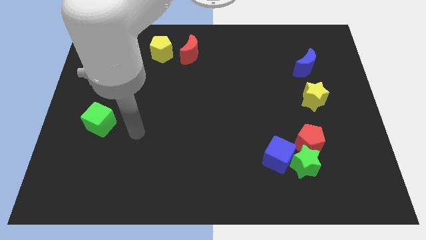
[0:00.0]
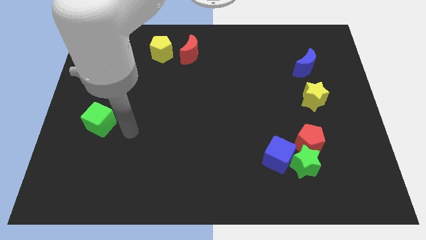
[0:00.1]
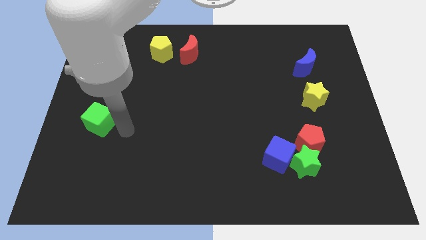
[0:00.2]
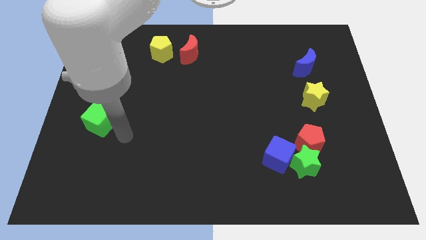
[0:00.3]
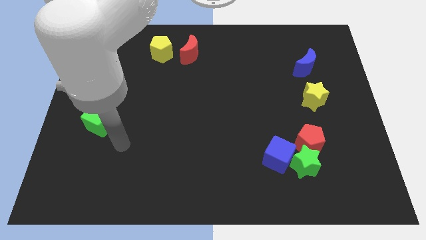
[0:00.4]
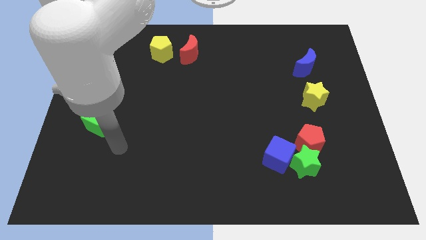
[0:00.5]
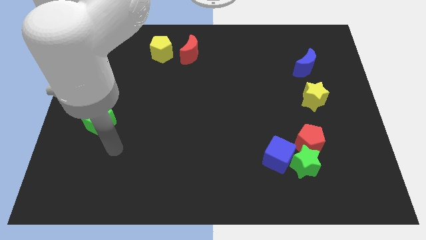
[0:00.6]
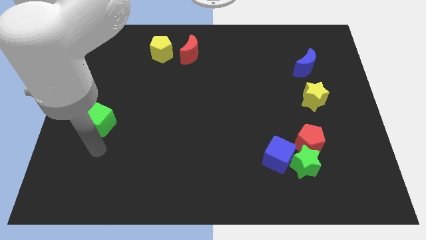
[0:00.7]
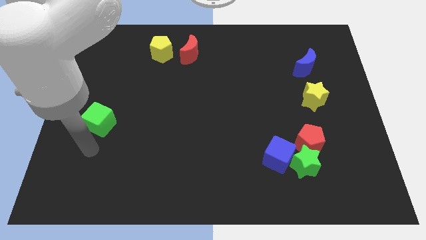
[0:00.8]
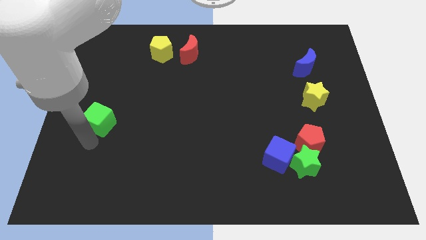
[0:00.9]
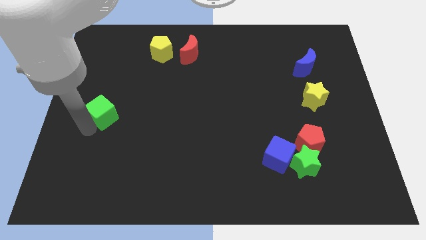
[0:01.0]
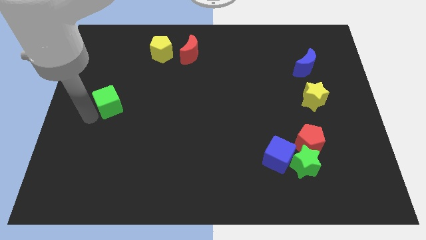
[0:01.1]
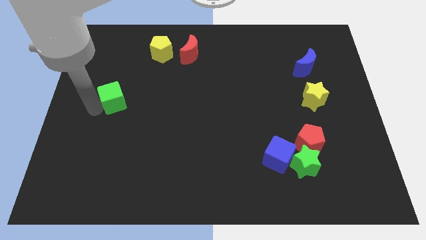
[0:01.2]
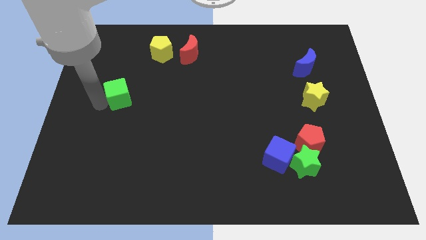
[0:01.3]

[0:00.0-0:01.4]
push green cube slightly upwards

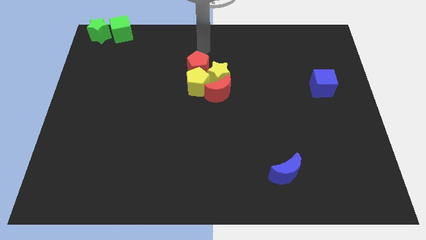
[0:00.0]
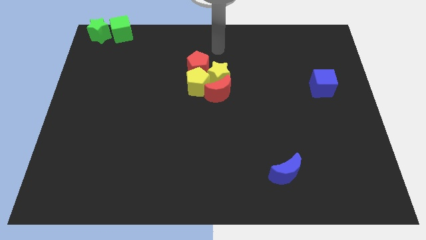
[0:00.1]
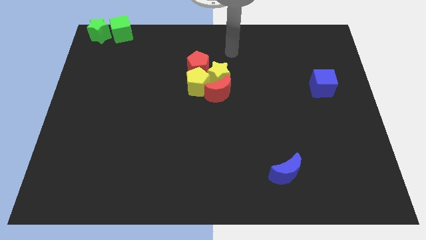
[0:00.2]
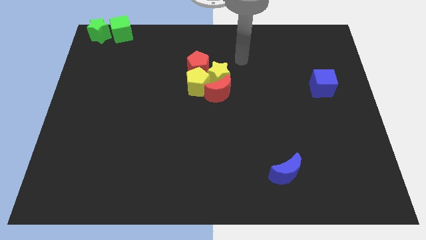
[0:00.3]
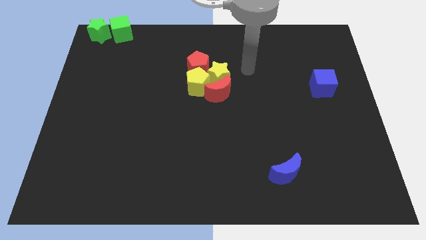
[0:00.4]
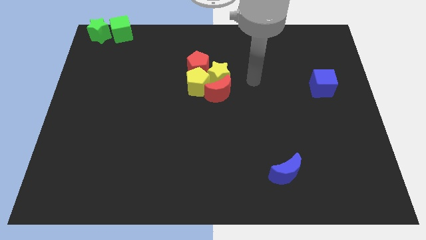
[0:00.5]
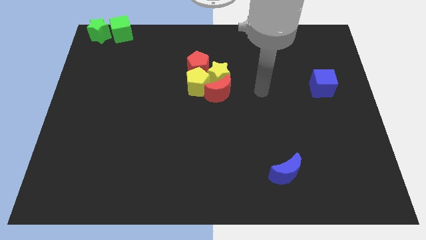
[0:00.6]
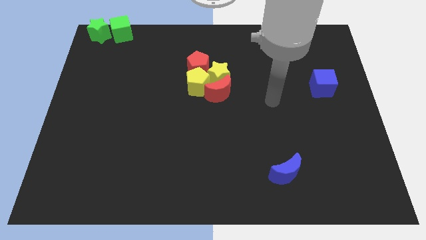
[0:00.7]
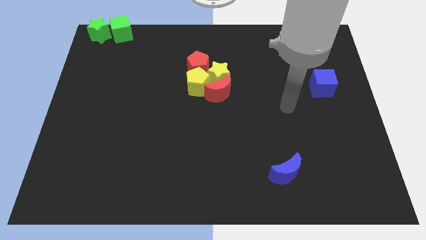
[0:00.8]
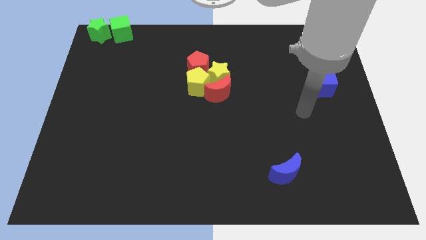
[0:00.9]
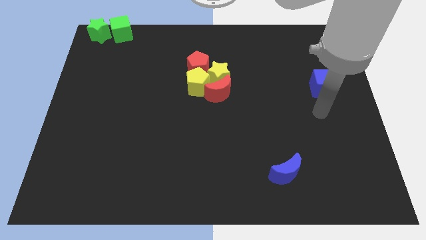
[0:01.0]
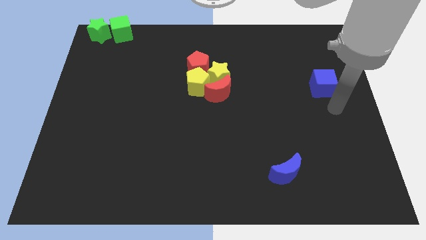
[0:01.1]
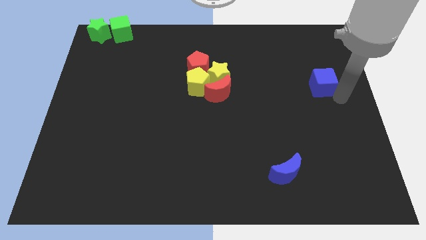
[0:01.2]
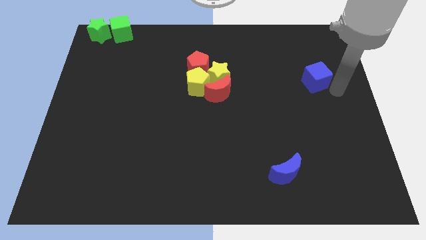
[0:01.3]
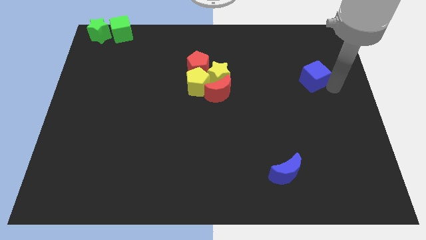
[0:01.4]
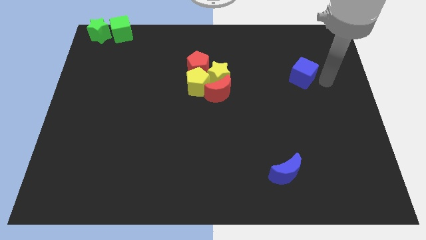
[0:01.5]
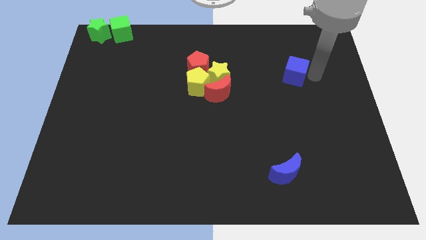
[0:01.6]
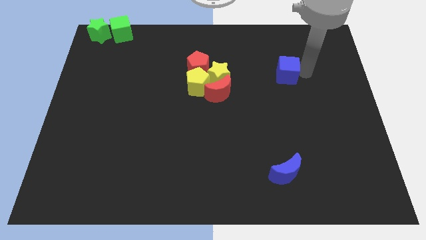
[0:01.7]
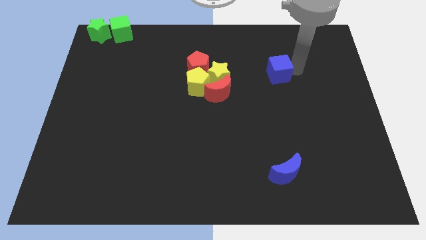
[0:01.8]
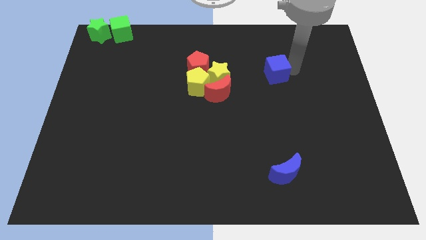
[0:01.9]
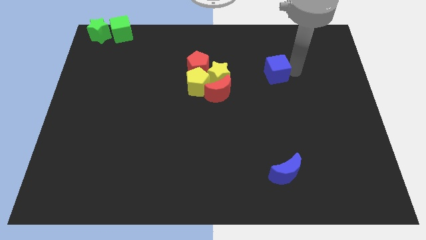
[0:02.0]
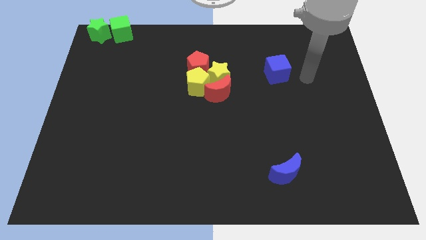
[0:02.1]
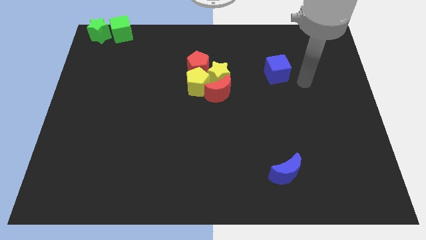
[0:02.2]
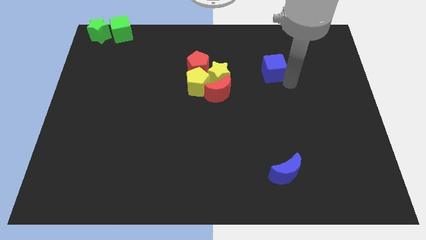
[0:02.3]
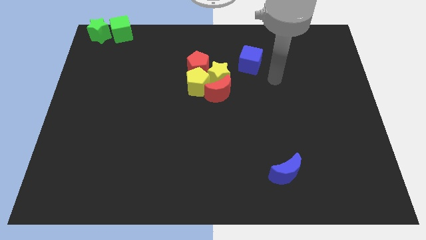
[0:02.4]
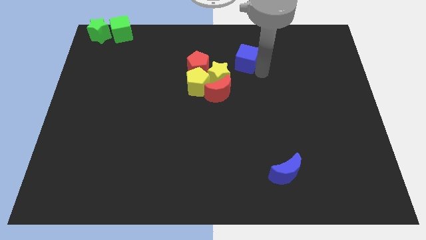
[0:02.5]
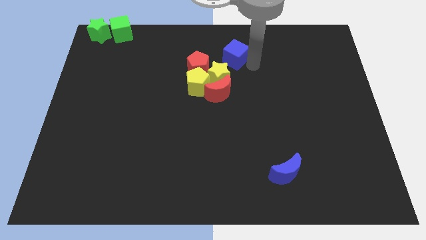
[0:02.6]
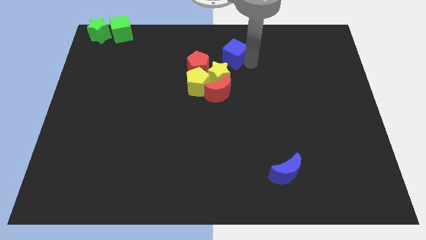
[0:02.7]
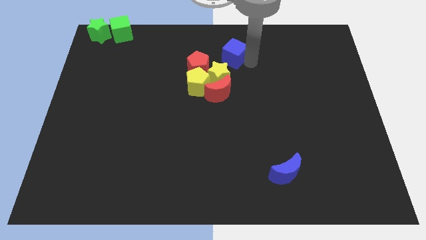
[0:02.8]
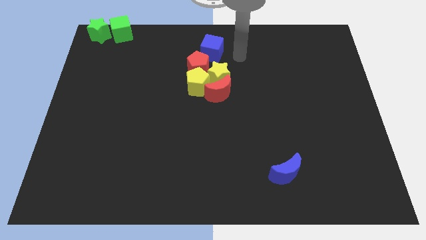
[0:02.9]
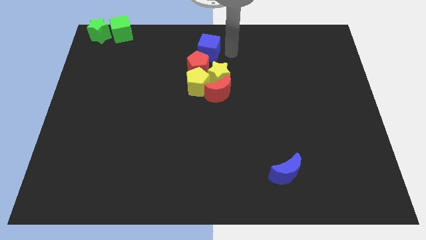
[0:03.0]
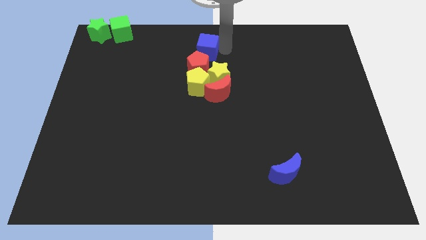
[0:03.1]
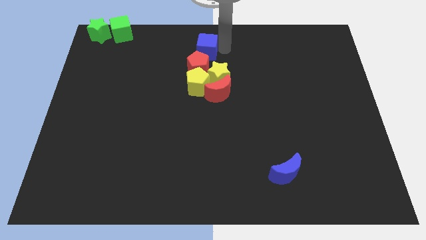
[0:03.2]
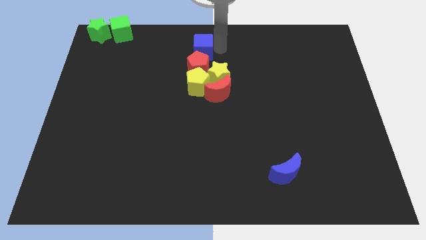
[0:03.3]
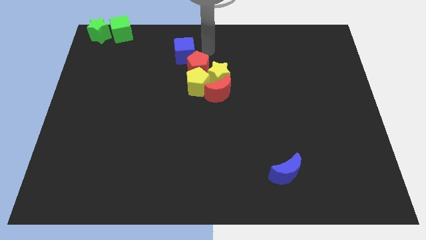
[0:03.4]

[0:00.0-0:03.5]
move the blue cube to the top side of the red pentagon

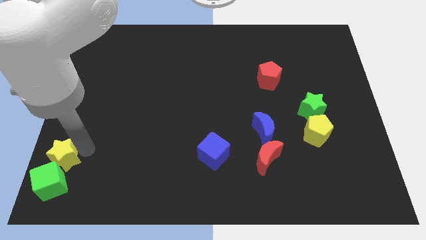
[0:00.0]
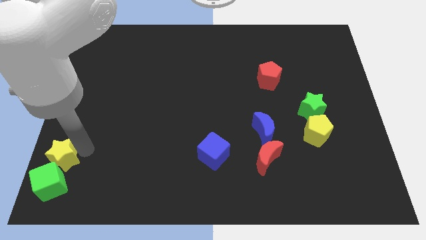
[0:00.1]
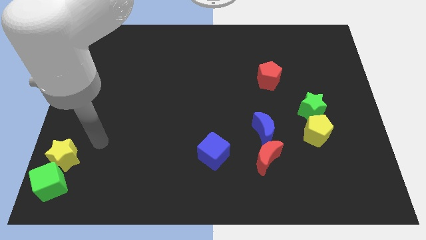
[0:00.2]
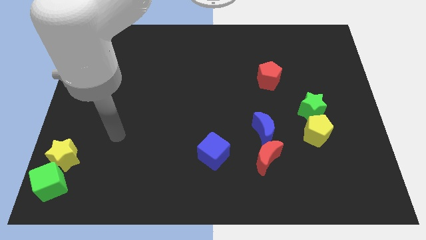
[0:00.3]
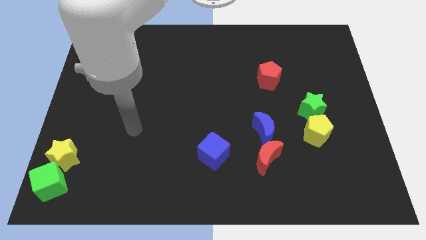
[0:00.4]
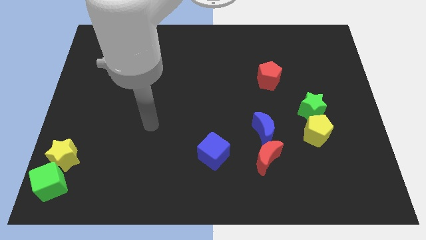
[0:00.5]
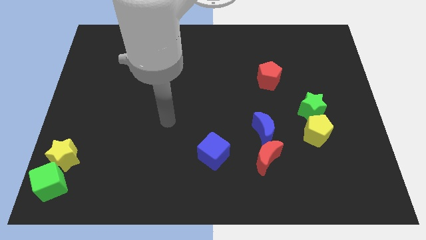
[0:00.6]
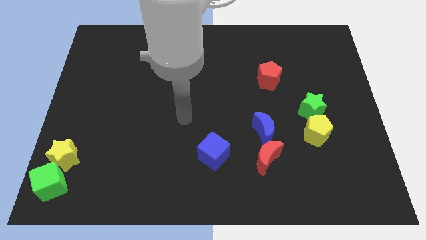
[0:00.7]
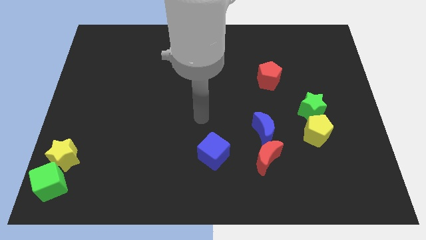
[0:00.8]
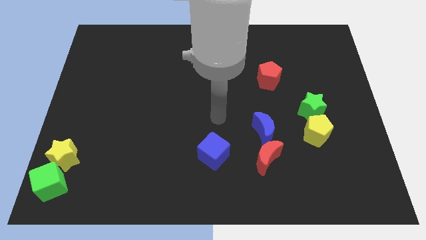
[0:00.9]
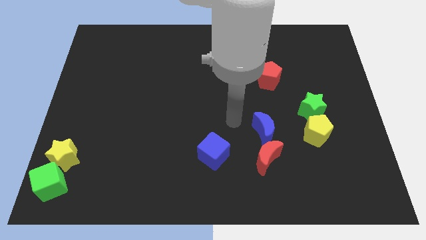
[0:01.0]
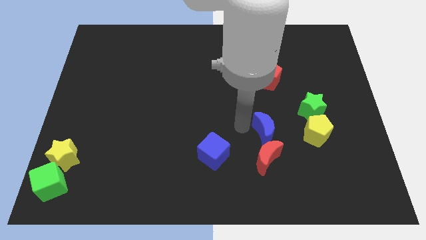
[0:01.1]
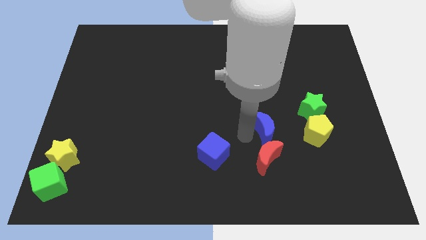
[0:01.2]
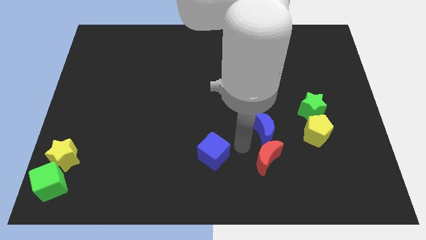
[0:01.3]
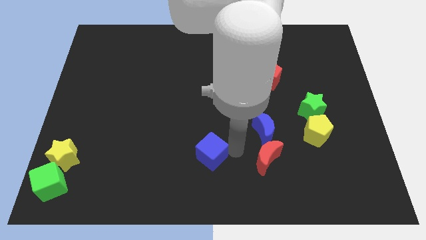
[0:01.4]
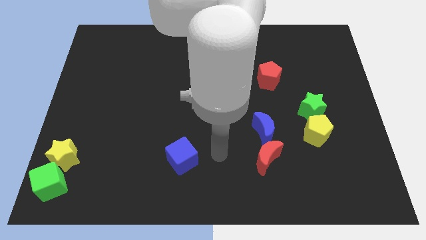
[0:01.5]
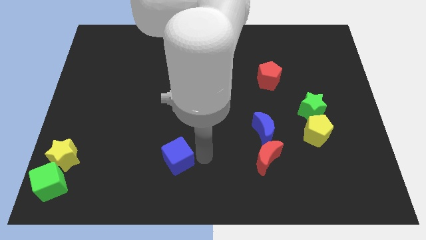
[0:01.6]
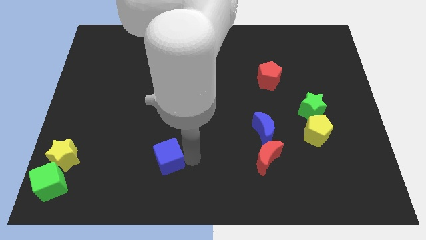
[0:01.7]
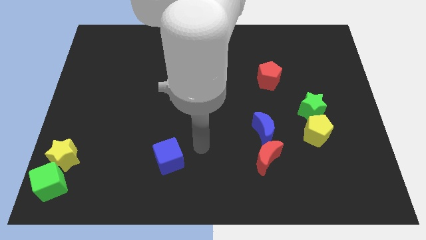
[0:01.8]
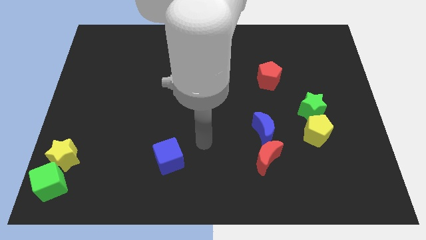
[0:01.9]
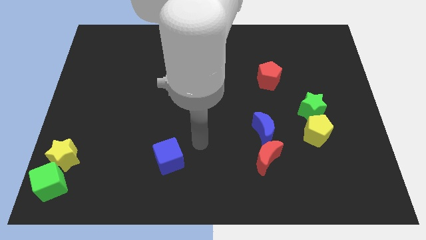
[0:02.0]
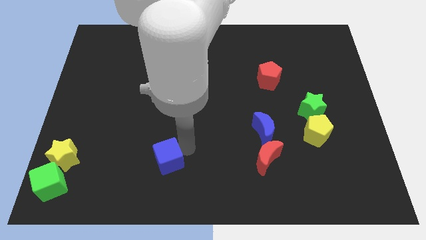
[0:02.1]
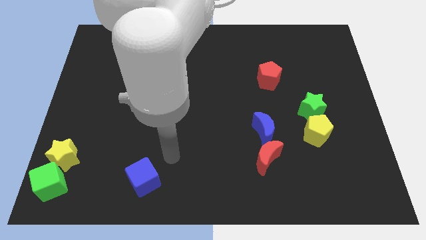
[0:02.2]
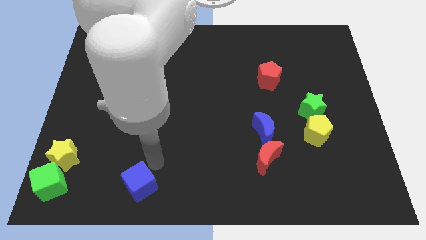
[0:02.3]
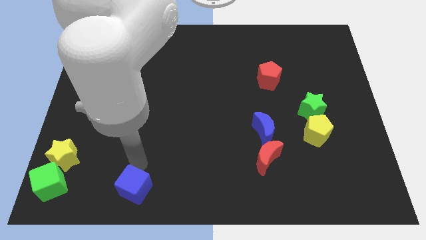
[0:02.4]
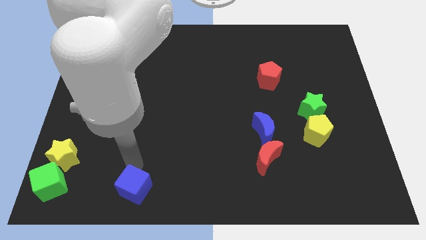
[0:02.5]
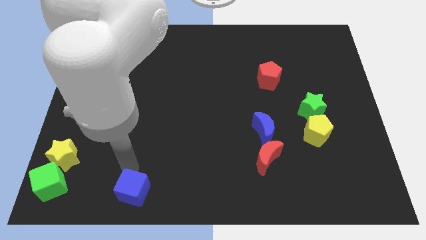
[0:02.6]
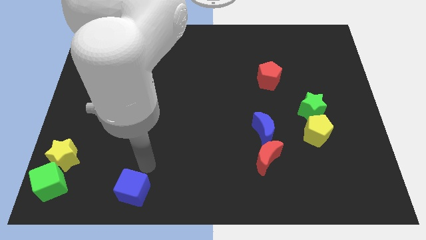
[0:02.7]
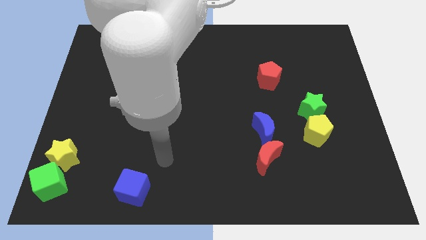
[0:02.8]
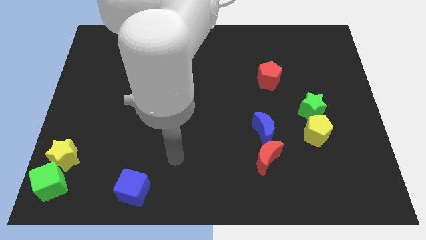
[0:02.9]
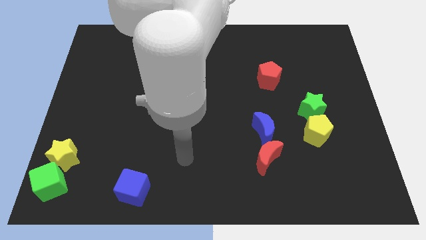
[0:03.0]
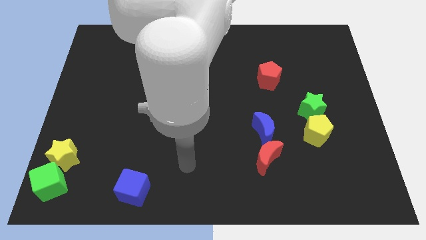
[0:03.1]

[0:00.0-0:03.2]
place the blue cube bottom right to the yellow star

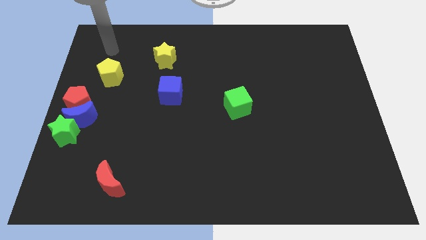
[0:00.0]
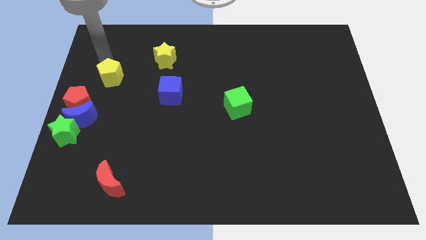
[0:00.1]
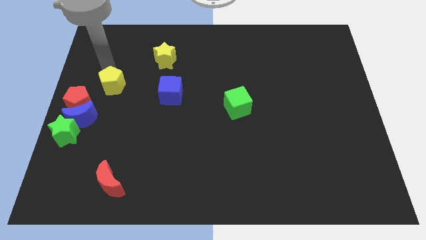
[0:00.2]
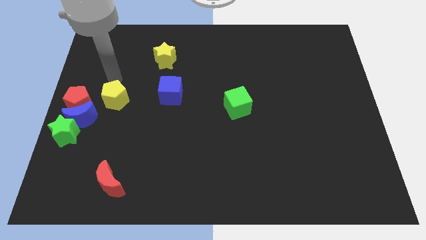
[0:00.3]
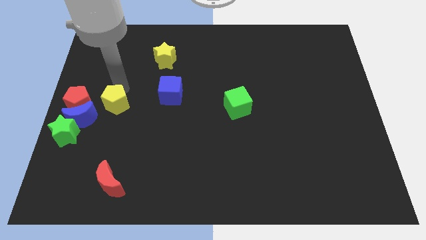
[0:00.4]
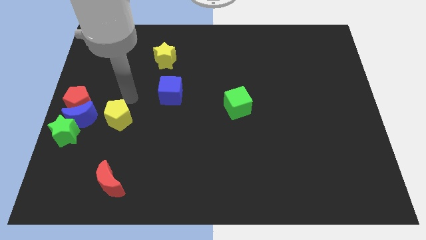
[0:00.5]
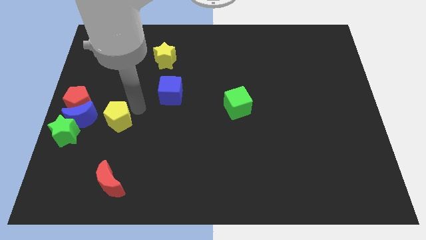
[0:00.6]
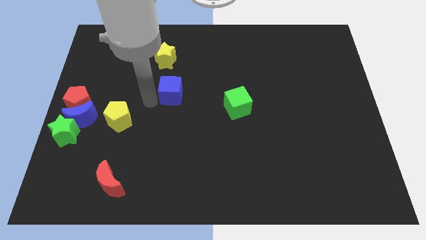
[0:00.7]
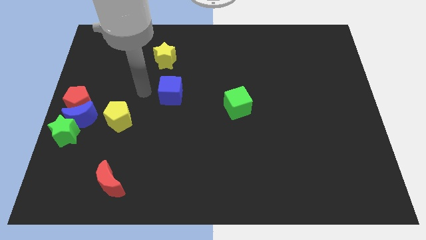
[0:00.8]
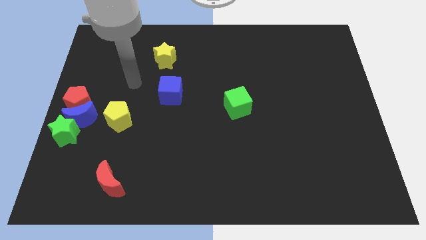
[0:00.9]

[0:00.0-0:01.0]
move the yellow pentagon to the right of the blue crescent
